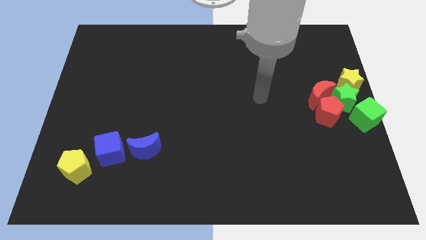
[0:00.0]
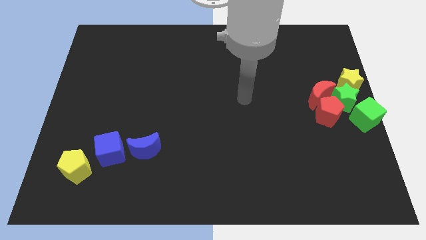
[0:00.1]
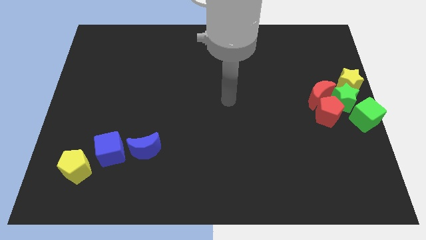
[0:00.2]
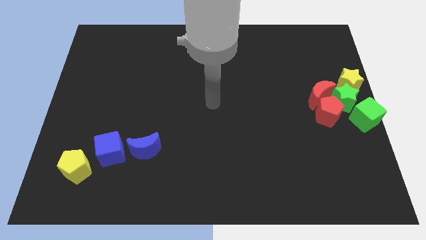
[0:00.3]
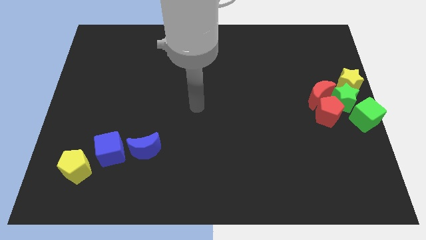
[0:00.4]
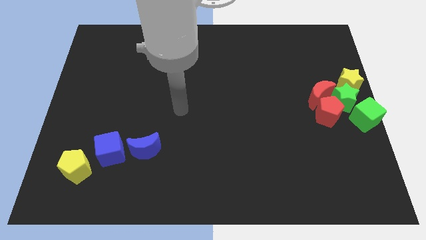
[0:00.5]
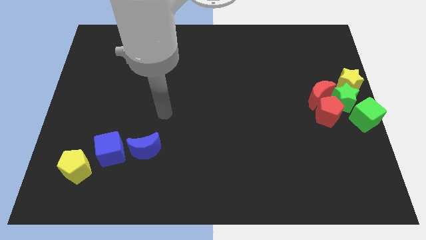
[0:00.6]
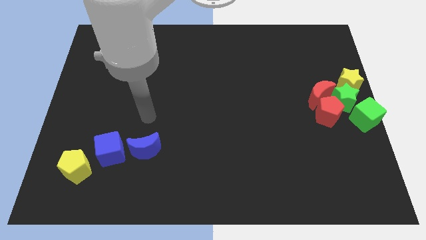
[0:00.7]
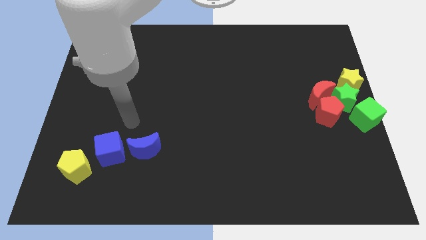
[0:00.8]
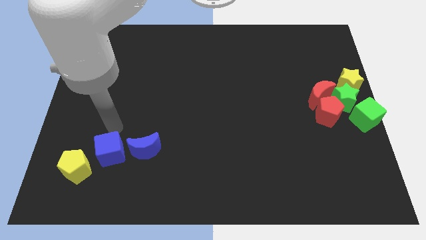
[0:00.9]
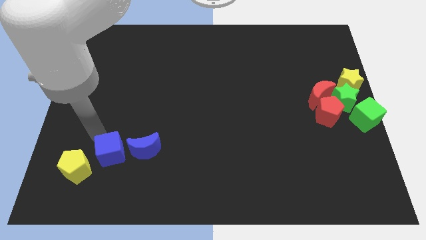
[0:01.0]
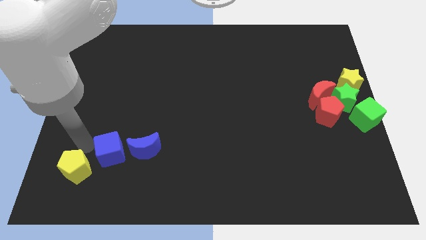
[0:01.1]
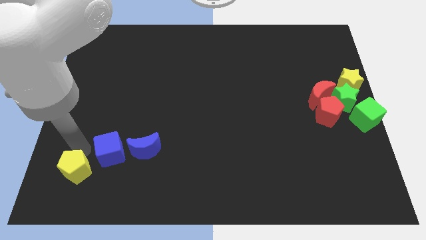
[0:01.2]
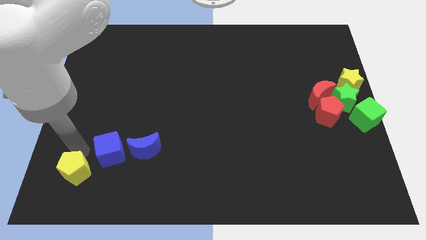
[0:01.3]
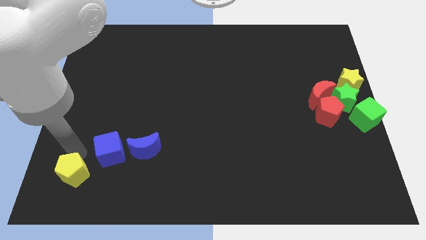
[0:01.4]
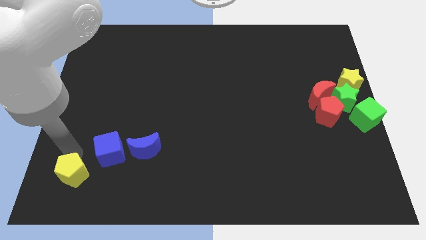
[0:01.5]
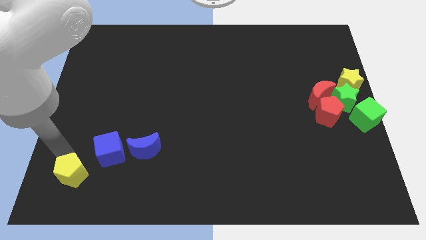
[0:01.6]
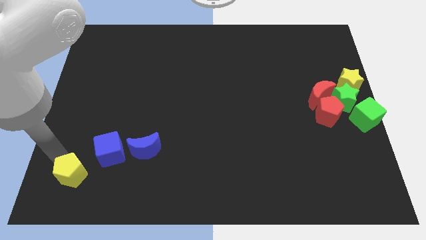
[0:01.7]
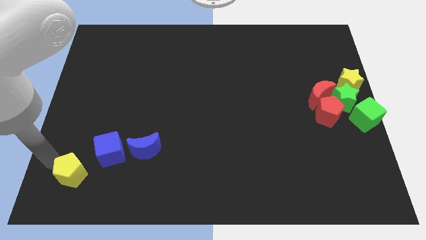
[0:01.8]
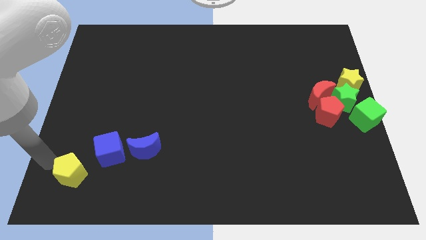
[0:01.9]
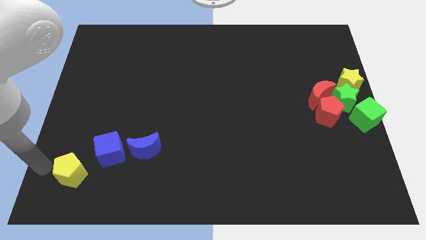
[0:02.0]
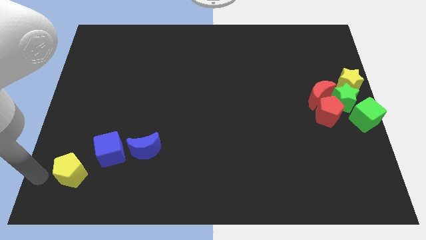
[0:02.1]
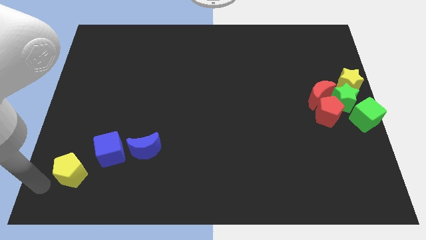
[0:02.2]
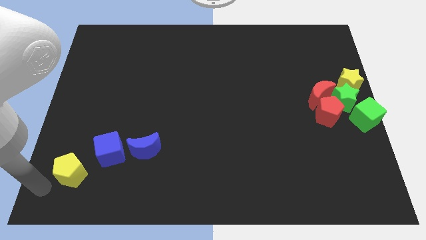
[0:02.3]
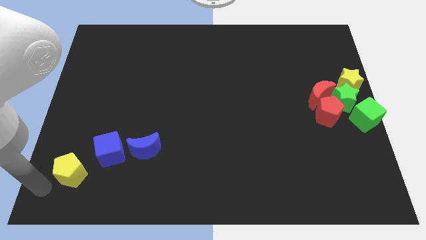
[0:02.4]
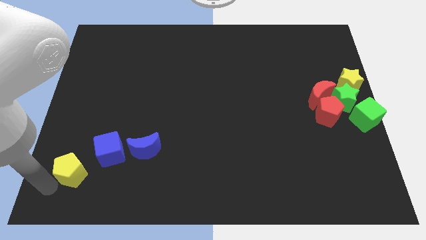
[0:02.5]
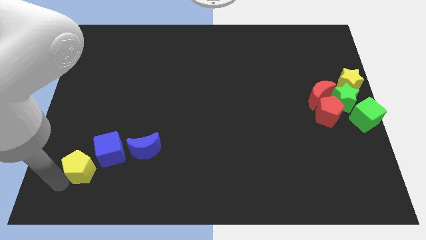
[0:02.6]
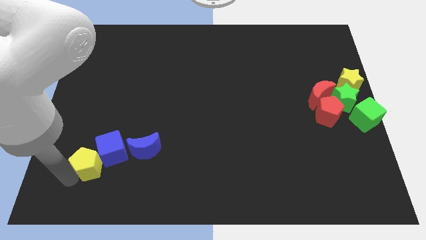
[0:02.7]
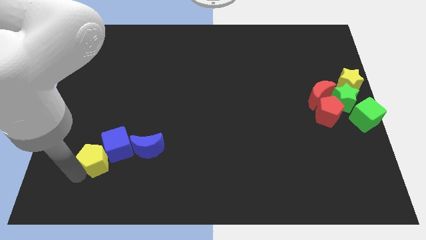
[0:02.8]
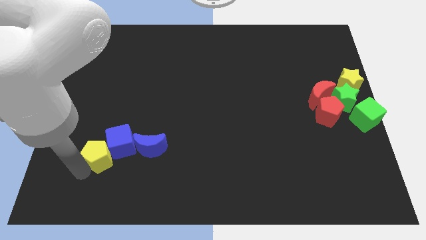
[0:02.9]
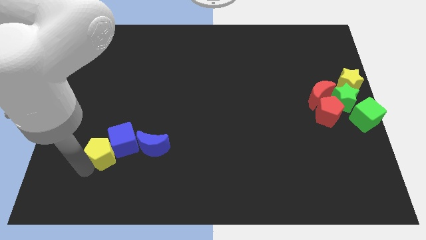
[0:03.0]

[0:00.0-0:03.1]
push the yellow pentagon into the blue cube

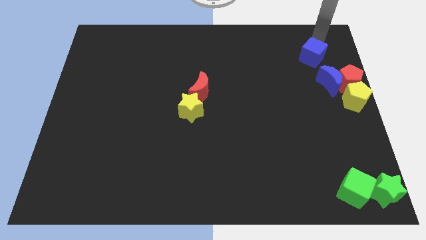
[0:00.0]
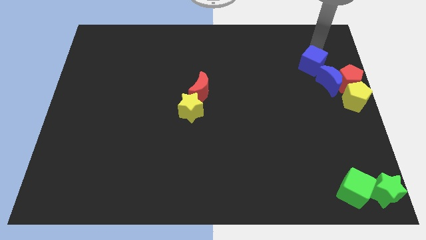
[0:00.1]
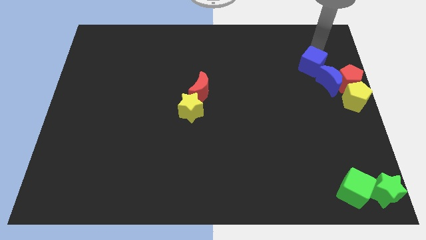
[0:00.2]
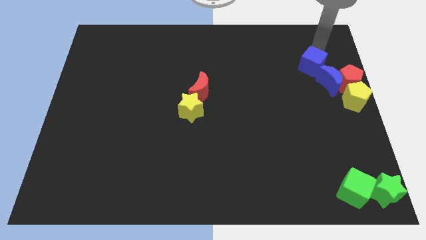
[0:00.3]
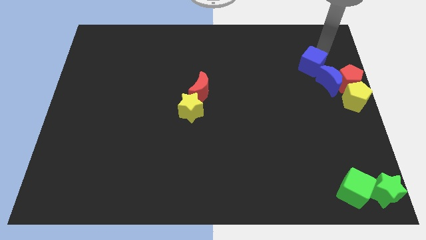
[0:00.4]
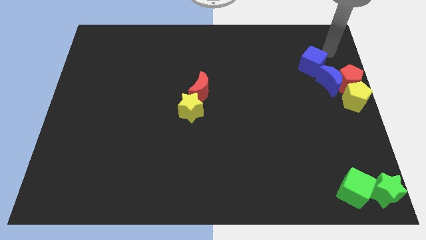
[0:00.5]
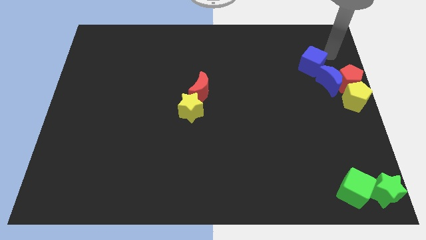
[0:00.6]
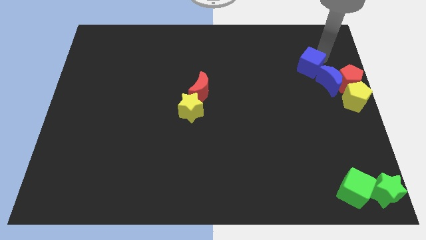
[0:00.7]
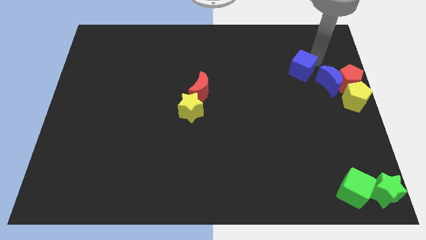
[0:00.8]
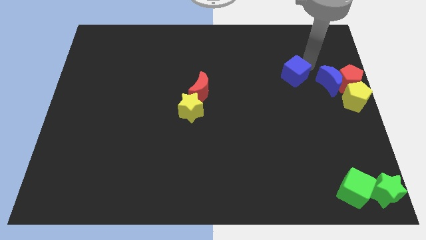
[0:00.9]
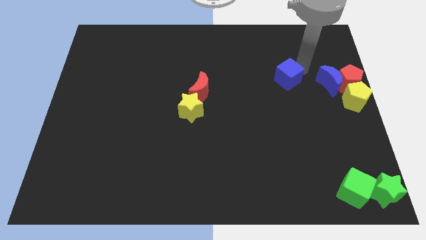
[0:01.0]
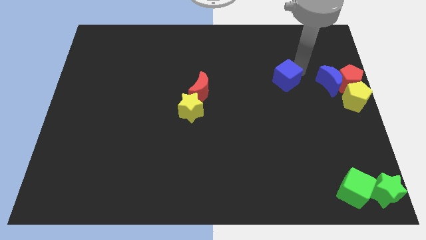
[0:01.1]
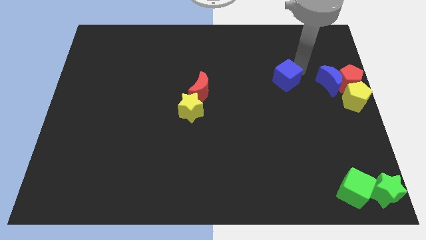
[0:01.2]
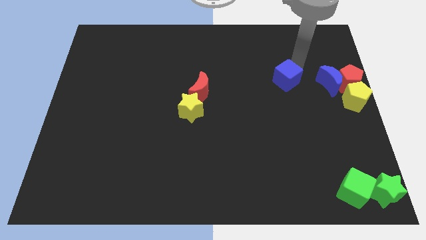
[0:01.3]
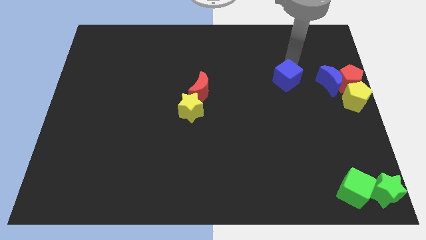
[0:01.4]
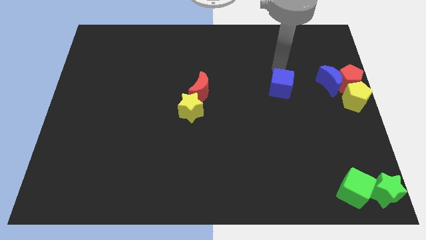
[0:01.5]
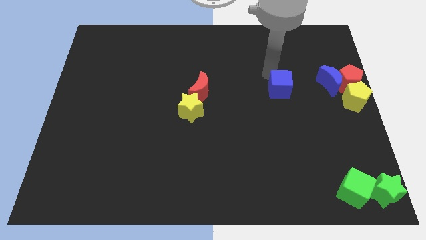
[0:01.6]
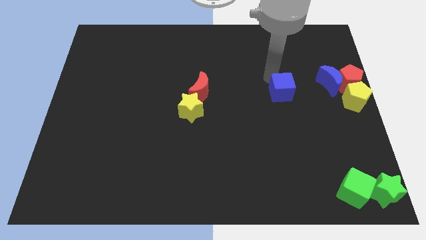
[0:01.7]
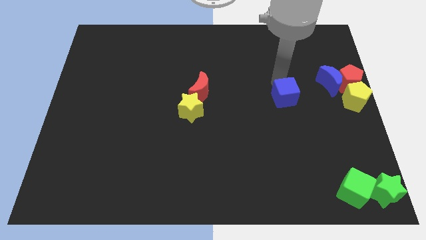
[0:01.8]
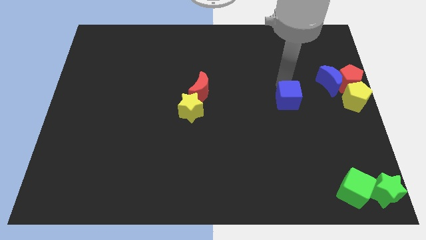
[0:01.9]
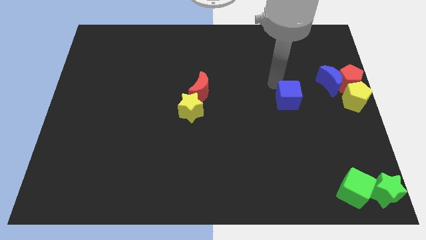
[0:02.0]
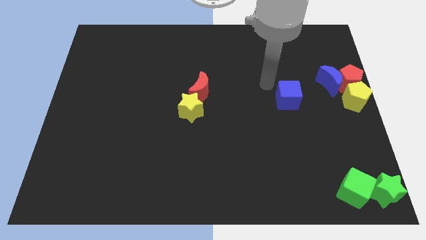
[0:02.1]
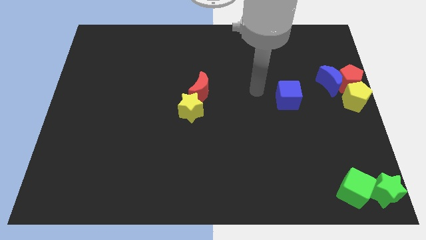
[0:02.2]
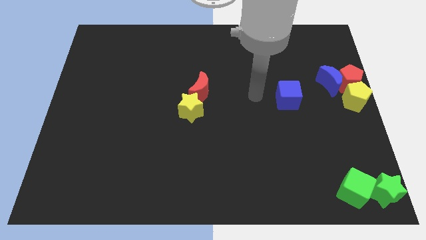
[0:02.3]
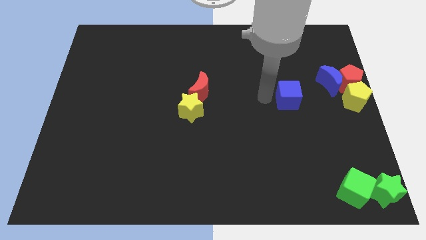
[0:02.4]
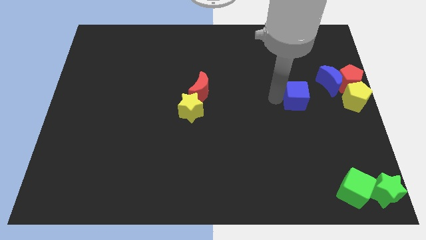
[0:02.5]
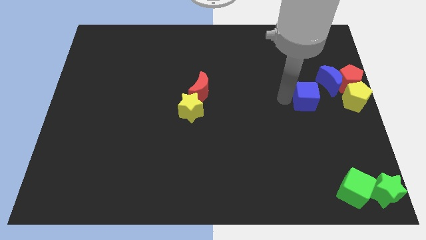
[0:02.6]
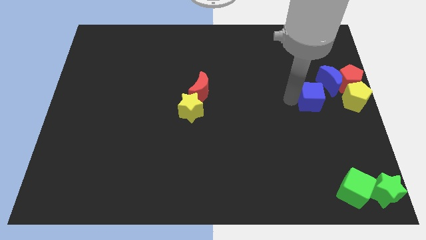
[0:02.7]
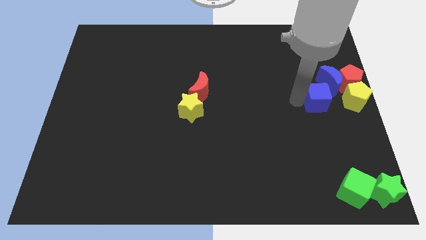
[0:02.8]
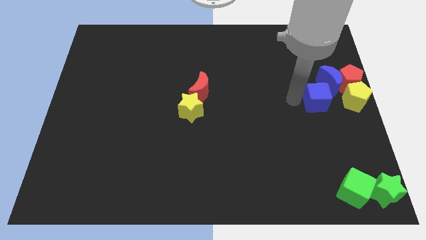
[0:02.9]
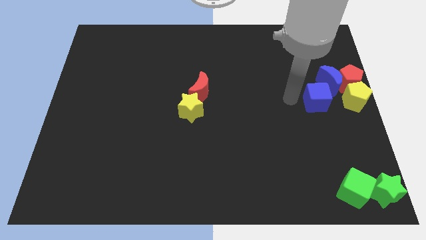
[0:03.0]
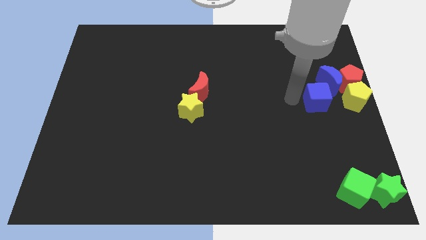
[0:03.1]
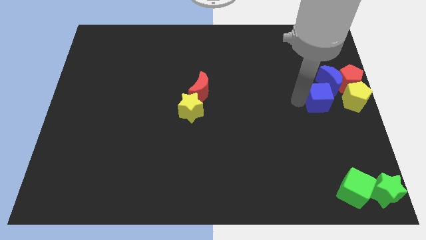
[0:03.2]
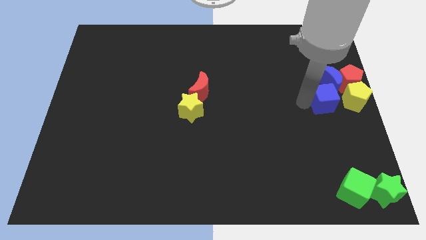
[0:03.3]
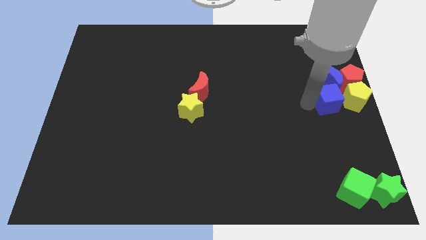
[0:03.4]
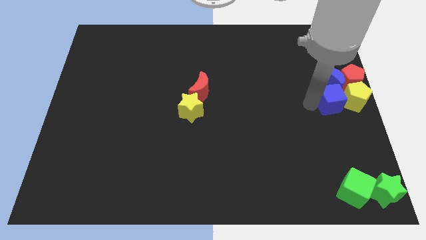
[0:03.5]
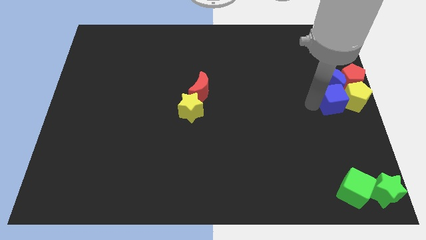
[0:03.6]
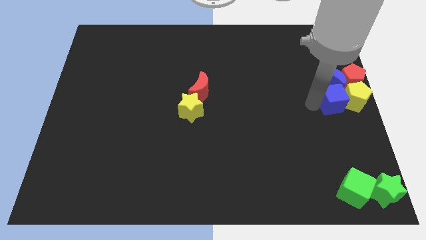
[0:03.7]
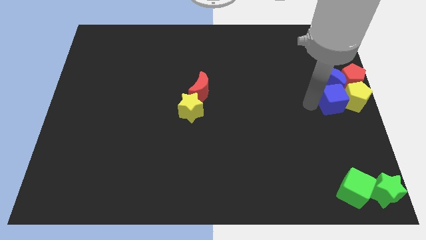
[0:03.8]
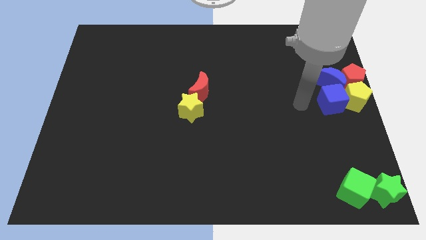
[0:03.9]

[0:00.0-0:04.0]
push the blue cube to the left of the yellow pentagon

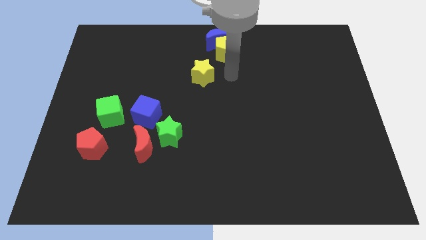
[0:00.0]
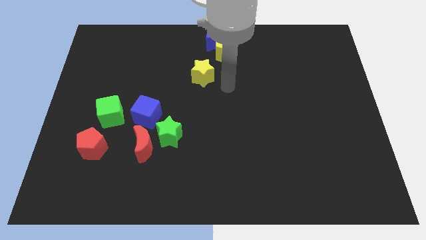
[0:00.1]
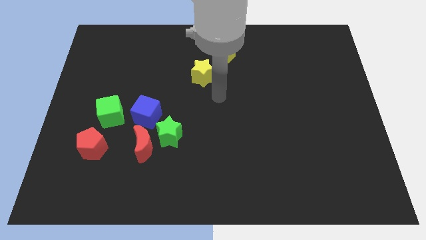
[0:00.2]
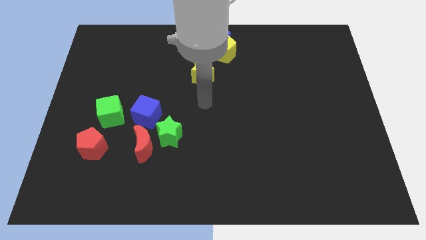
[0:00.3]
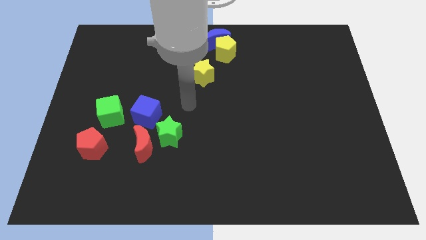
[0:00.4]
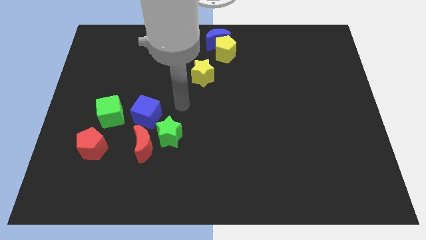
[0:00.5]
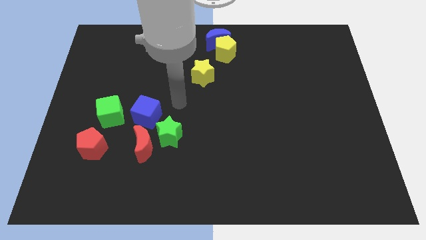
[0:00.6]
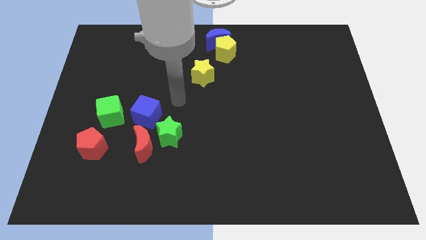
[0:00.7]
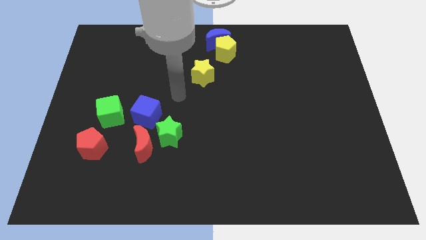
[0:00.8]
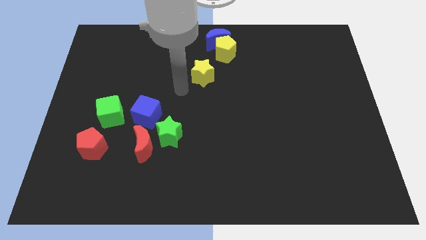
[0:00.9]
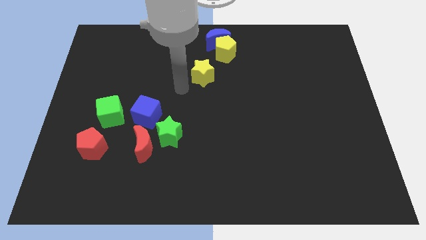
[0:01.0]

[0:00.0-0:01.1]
move away from the yellow pentagon

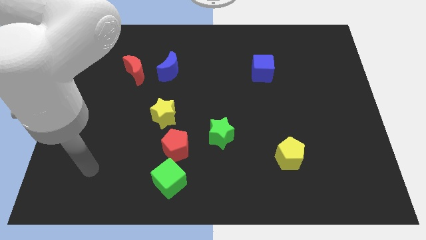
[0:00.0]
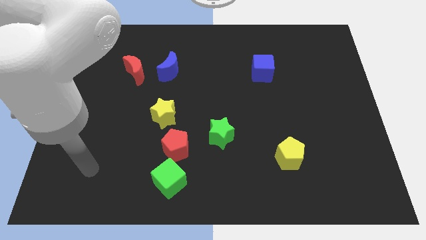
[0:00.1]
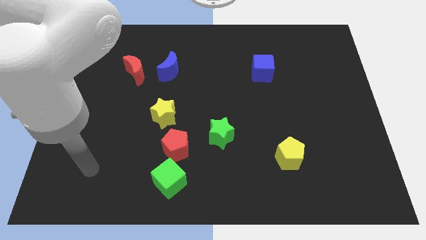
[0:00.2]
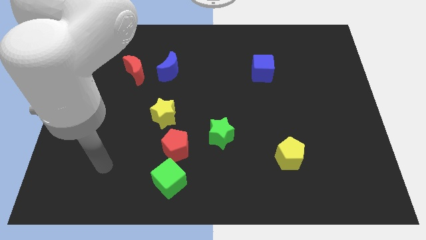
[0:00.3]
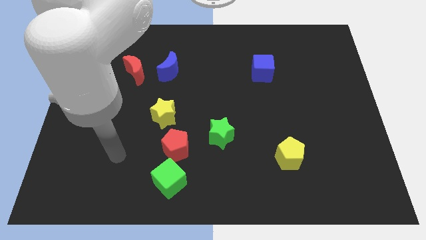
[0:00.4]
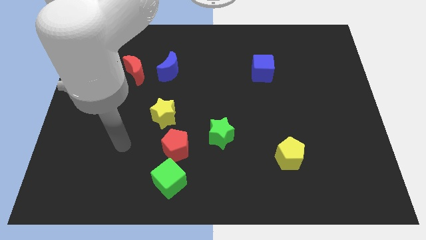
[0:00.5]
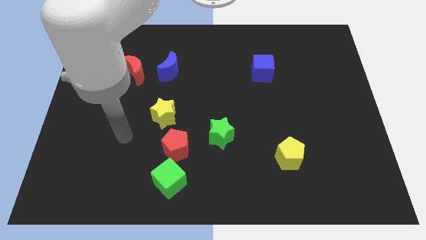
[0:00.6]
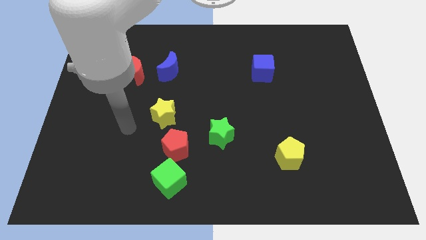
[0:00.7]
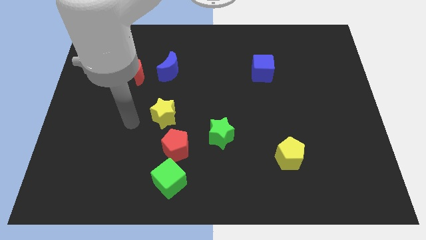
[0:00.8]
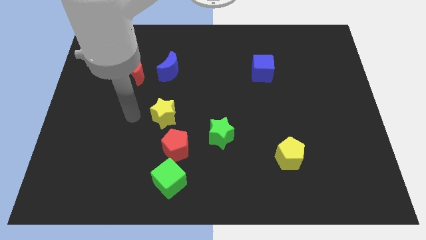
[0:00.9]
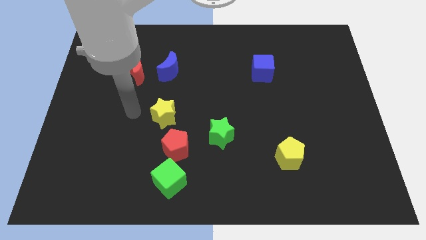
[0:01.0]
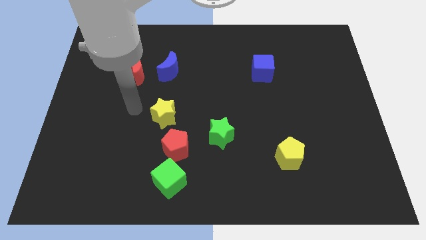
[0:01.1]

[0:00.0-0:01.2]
place your hand parallel left to the yellow star
